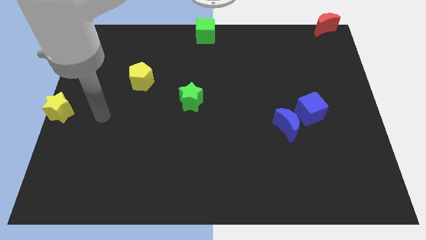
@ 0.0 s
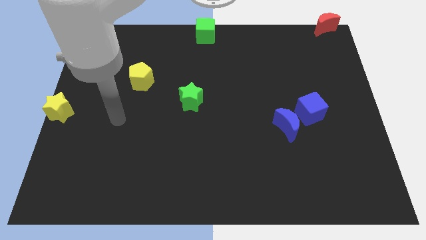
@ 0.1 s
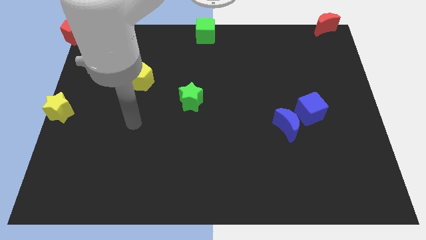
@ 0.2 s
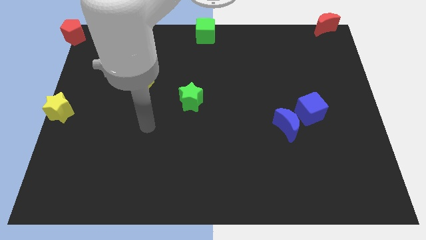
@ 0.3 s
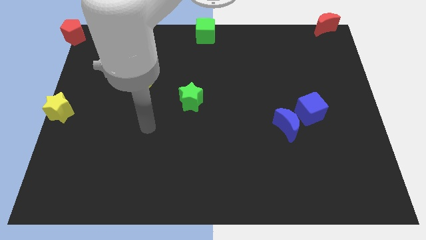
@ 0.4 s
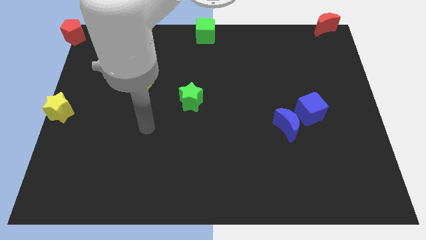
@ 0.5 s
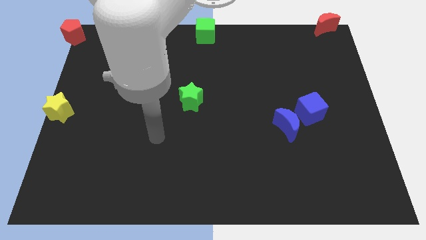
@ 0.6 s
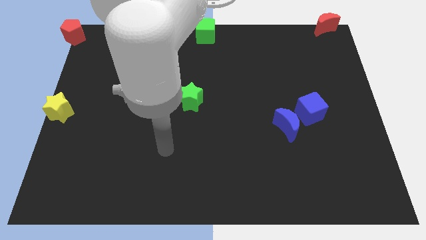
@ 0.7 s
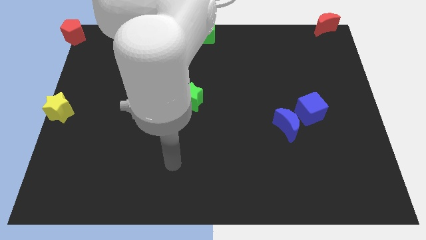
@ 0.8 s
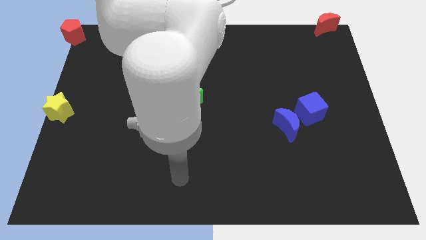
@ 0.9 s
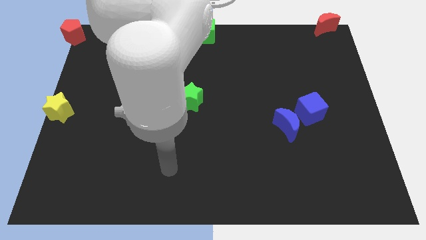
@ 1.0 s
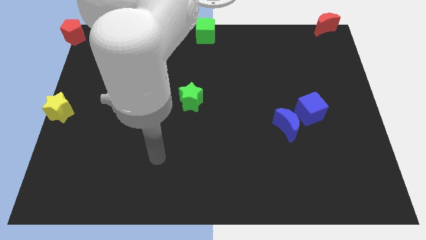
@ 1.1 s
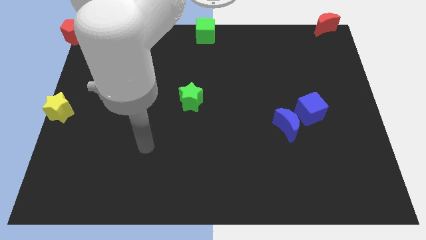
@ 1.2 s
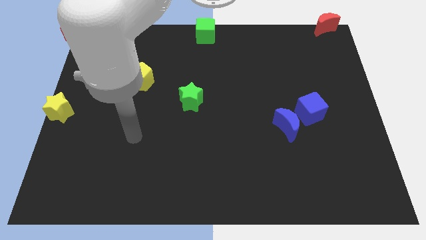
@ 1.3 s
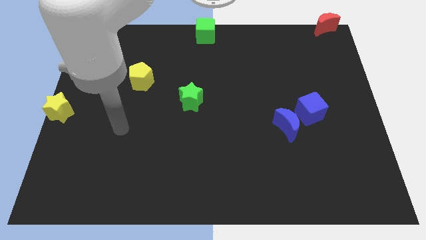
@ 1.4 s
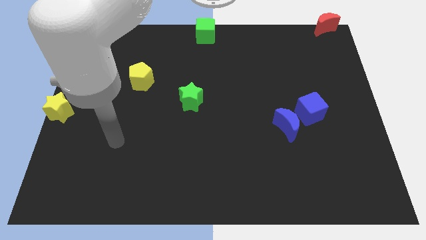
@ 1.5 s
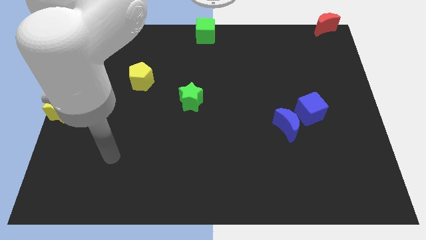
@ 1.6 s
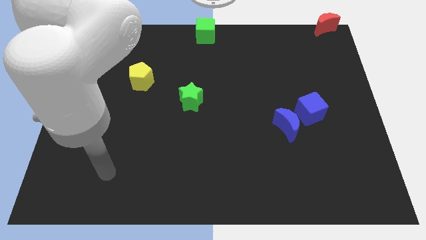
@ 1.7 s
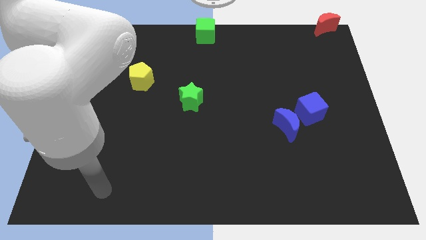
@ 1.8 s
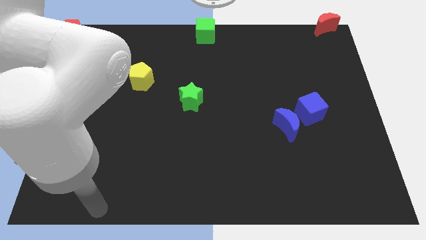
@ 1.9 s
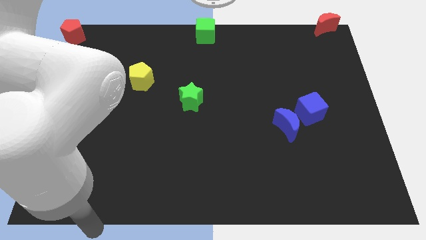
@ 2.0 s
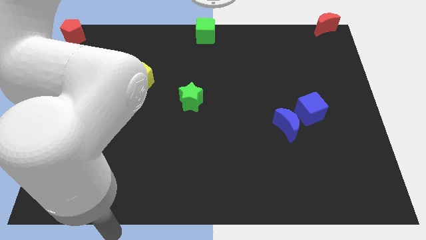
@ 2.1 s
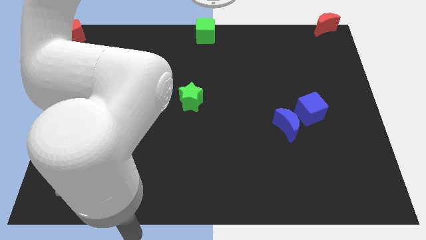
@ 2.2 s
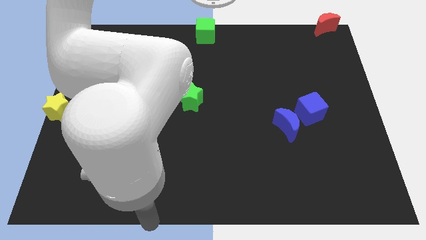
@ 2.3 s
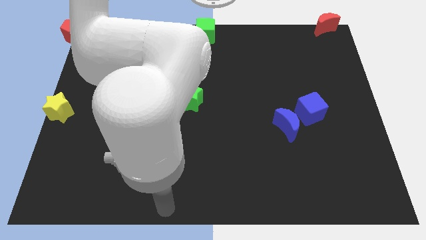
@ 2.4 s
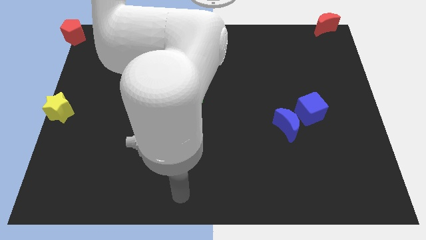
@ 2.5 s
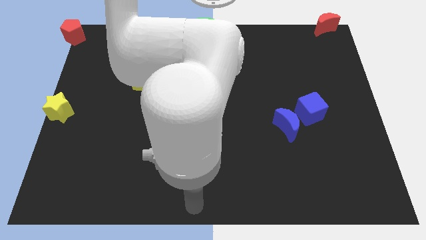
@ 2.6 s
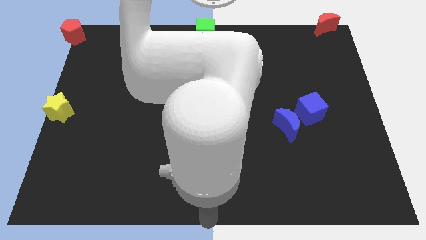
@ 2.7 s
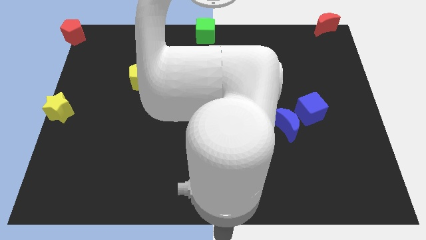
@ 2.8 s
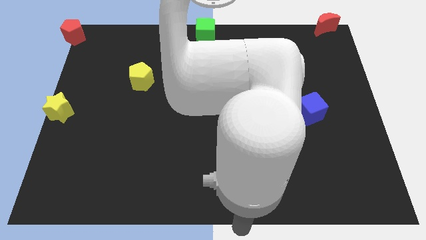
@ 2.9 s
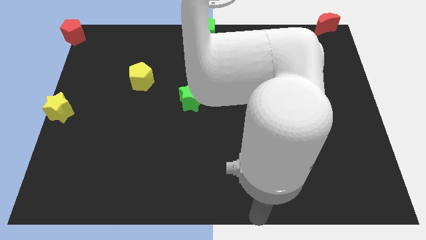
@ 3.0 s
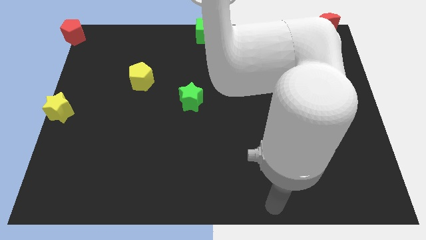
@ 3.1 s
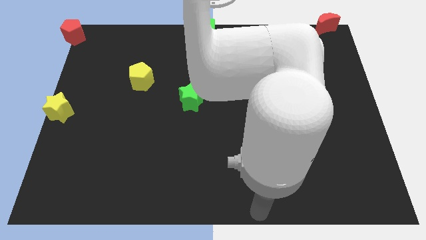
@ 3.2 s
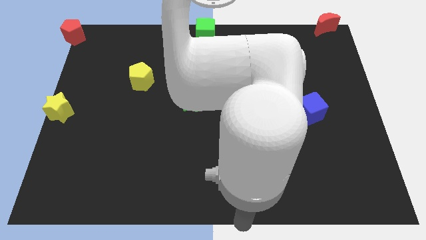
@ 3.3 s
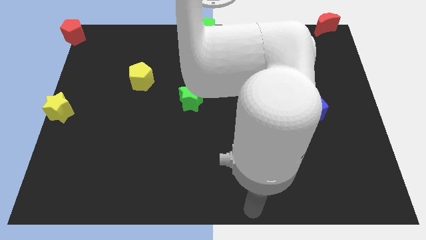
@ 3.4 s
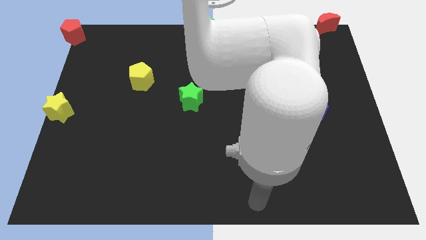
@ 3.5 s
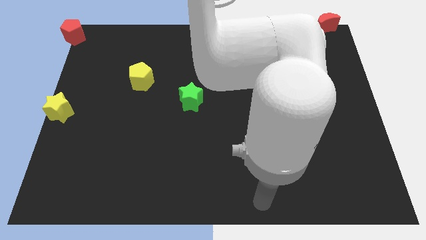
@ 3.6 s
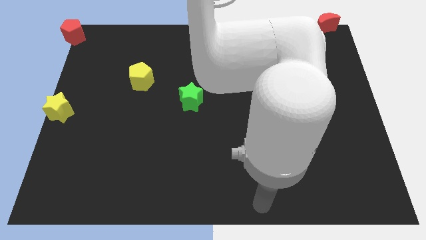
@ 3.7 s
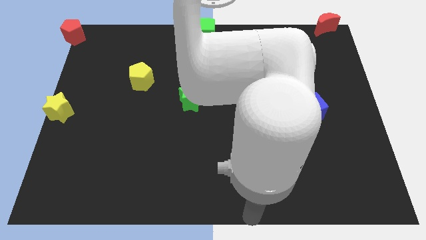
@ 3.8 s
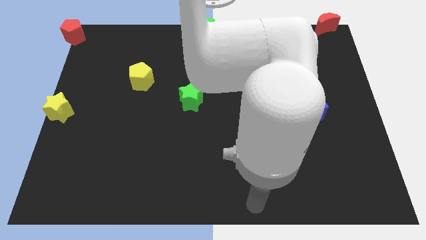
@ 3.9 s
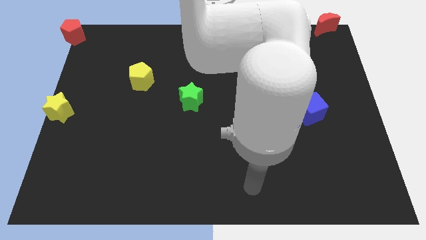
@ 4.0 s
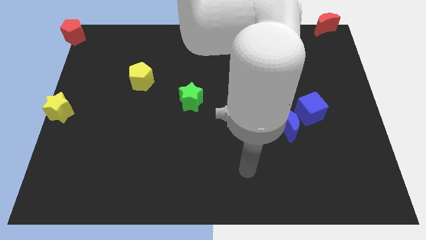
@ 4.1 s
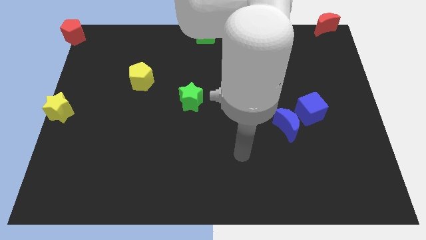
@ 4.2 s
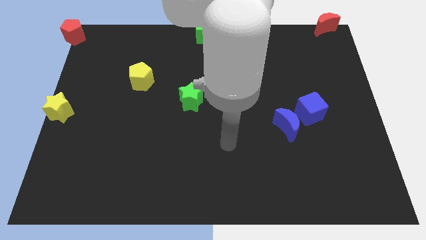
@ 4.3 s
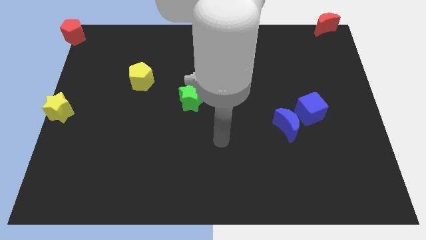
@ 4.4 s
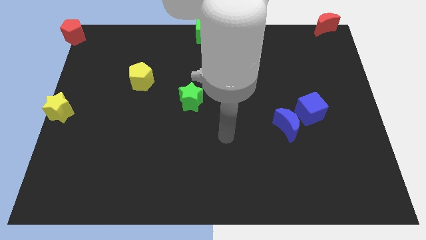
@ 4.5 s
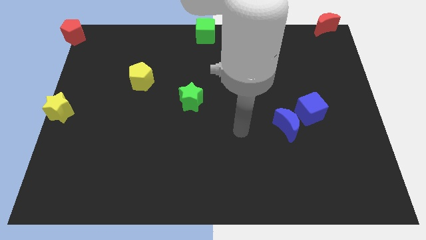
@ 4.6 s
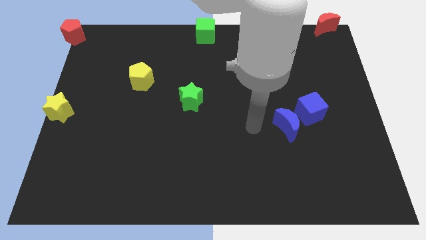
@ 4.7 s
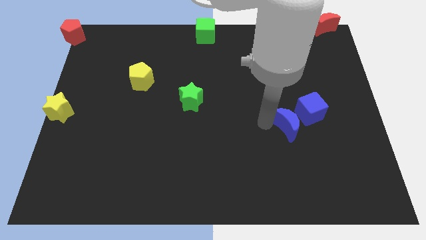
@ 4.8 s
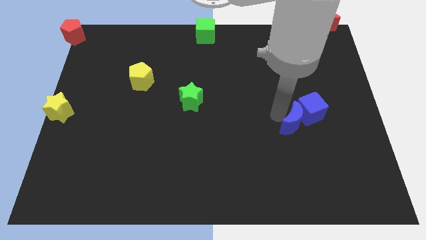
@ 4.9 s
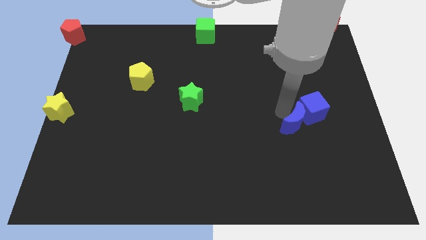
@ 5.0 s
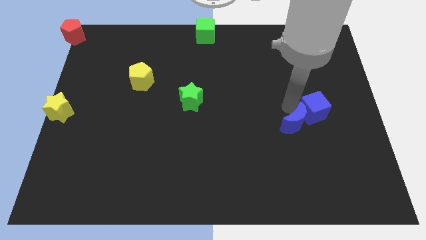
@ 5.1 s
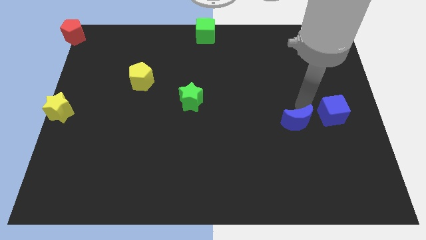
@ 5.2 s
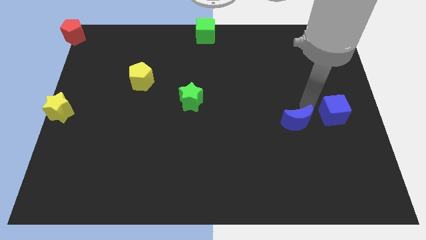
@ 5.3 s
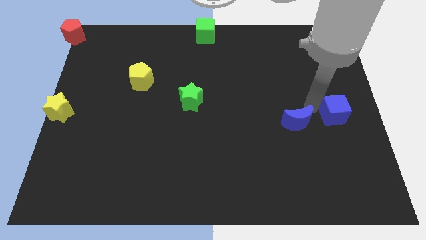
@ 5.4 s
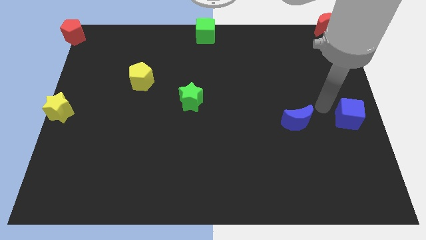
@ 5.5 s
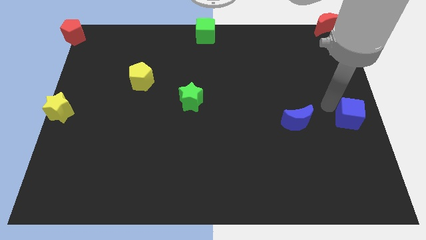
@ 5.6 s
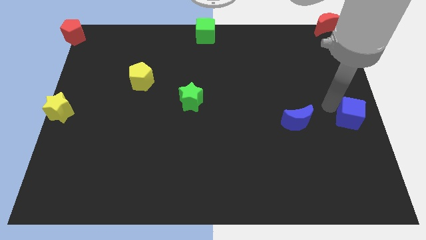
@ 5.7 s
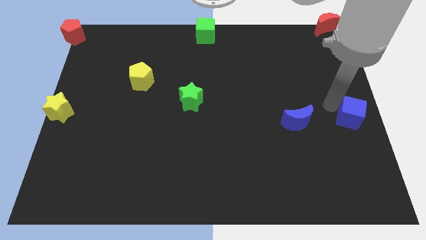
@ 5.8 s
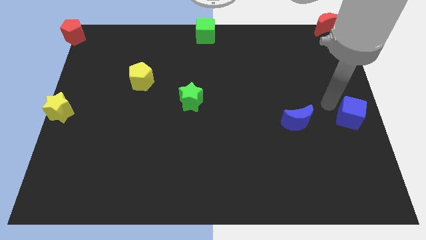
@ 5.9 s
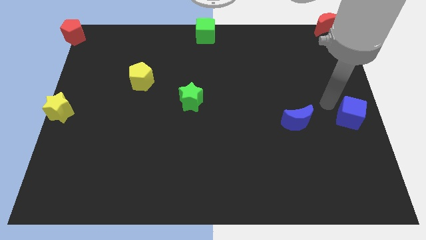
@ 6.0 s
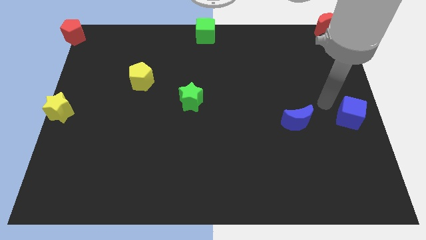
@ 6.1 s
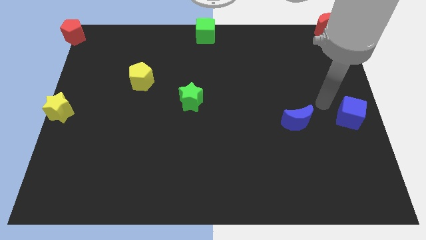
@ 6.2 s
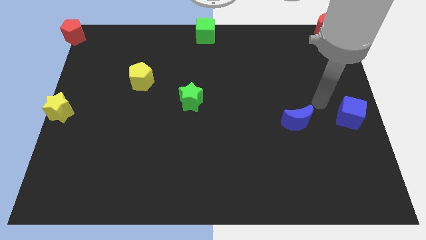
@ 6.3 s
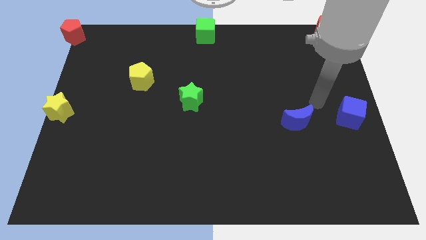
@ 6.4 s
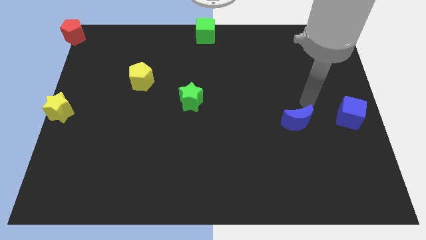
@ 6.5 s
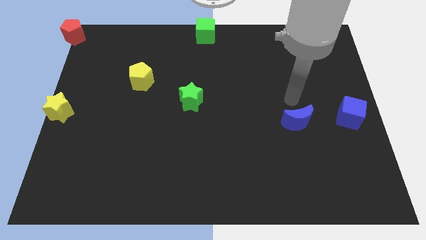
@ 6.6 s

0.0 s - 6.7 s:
separate the blue cube from the blue crescent

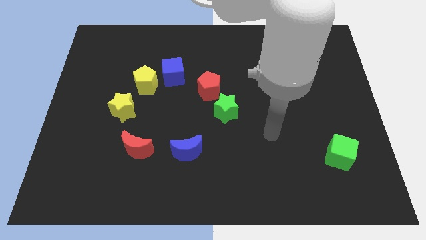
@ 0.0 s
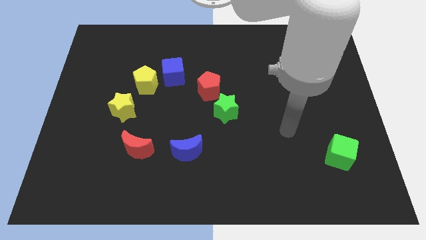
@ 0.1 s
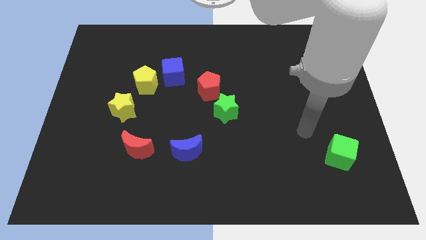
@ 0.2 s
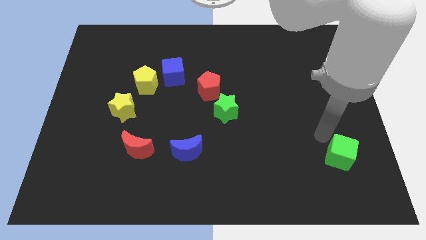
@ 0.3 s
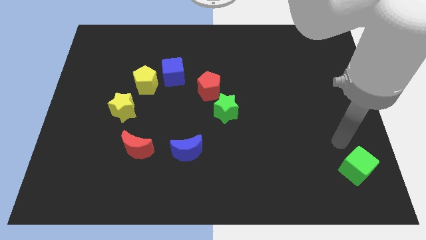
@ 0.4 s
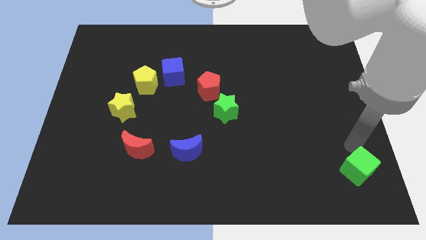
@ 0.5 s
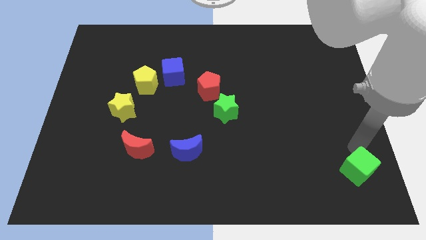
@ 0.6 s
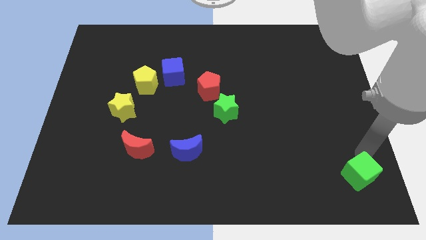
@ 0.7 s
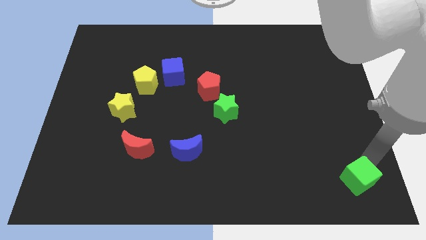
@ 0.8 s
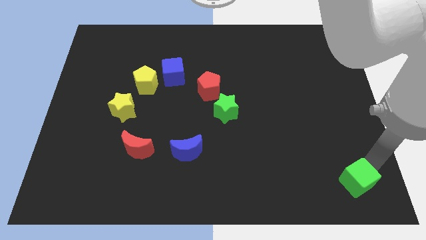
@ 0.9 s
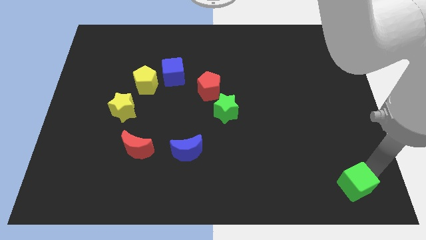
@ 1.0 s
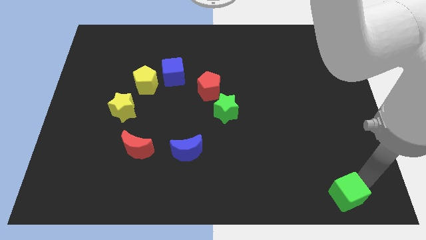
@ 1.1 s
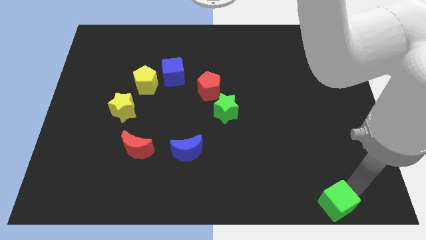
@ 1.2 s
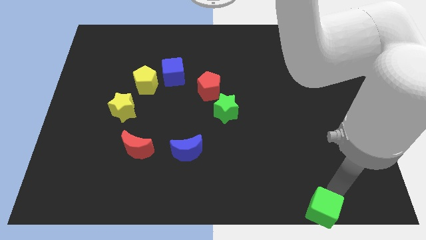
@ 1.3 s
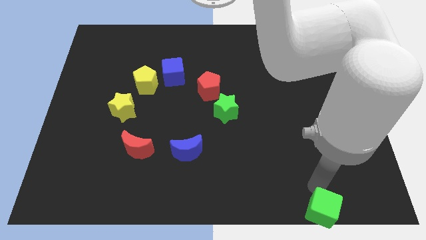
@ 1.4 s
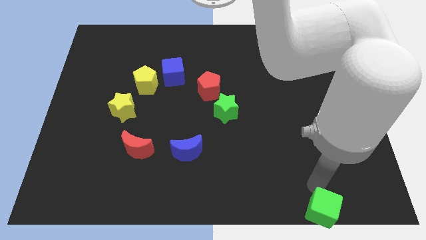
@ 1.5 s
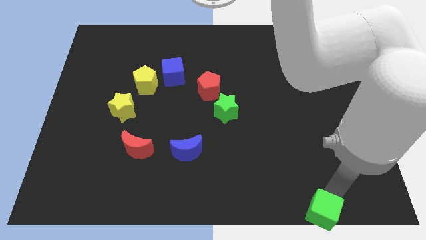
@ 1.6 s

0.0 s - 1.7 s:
push the green cube towards the bottom right side of the board

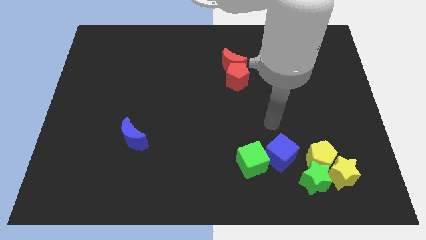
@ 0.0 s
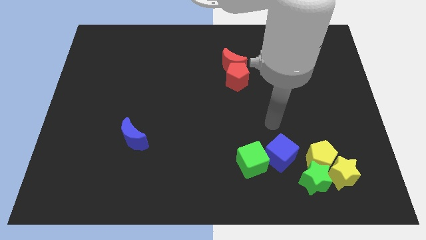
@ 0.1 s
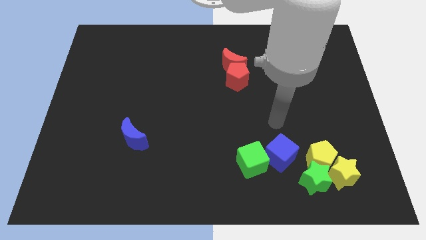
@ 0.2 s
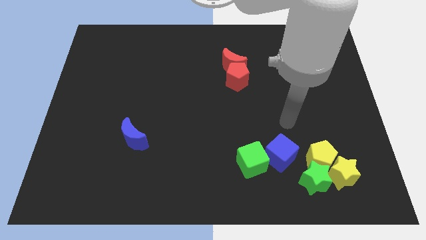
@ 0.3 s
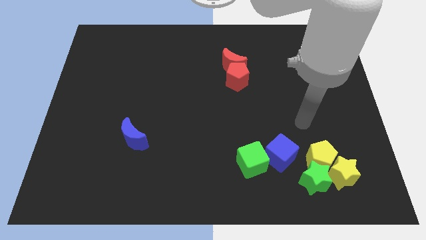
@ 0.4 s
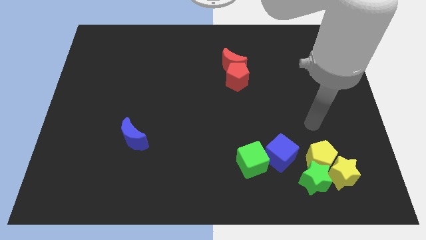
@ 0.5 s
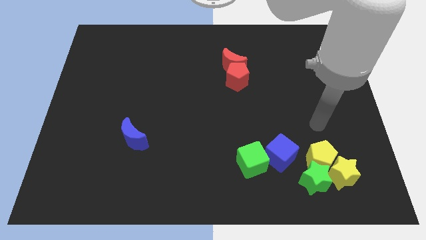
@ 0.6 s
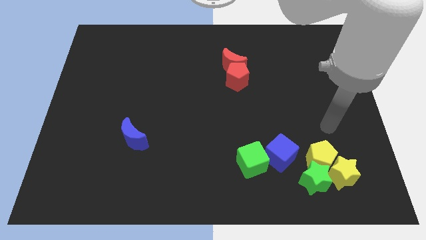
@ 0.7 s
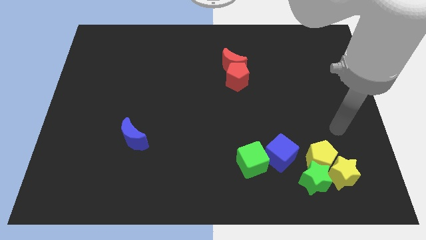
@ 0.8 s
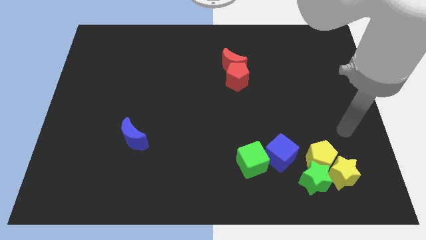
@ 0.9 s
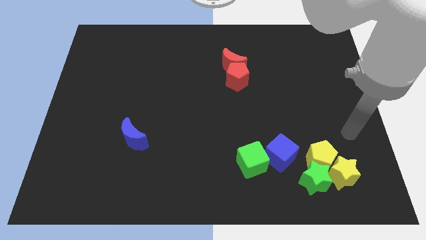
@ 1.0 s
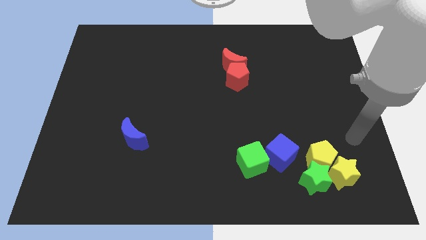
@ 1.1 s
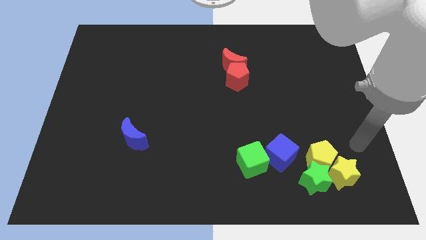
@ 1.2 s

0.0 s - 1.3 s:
place the arm diagonally to the yellow star
